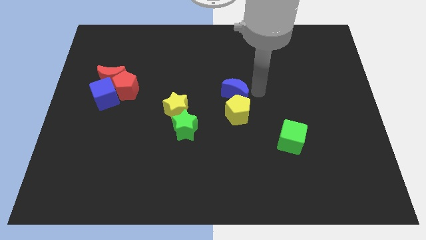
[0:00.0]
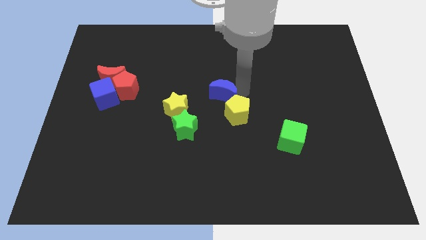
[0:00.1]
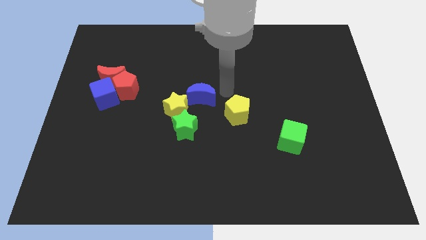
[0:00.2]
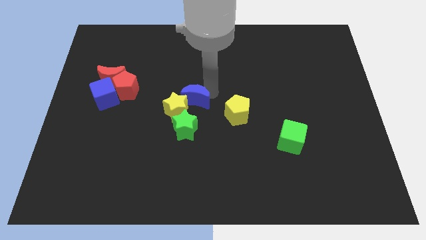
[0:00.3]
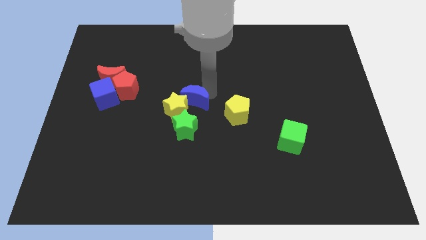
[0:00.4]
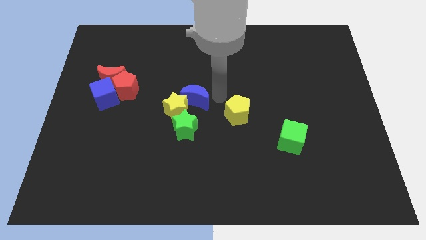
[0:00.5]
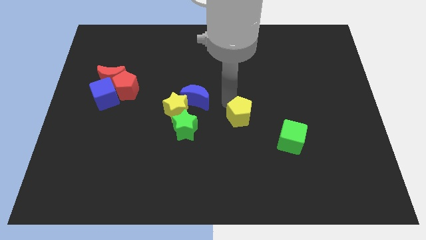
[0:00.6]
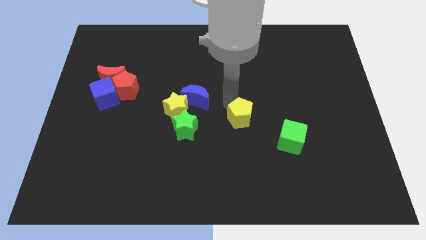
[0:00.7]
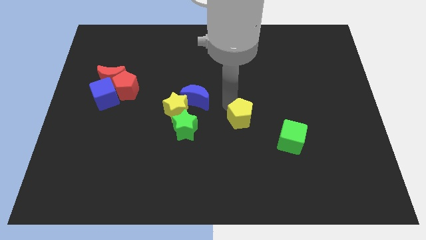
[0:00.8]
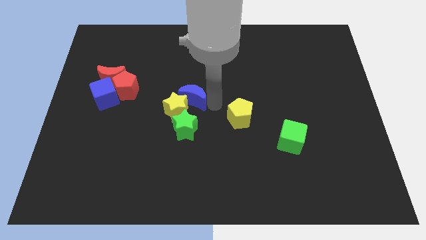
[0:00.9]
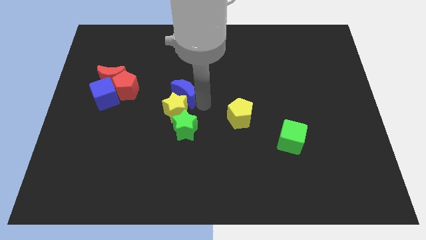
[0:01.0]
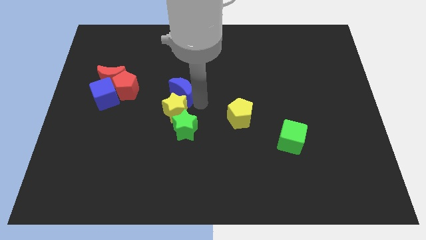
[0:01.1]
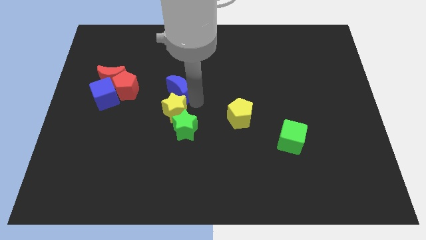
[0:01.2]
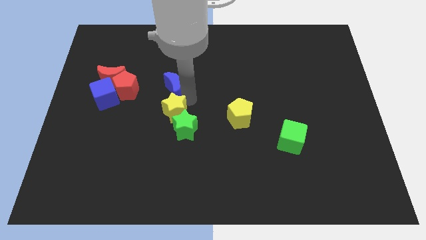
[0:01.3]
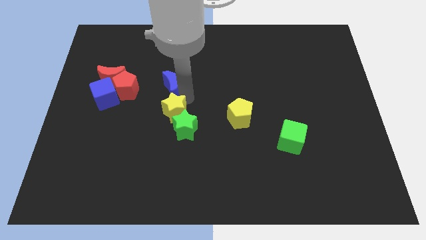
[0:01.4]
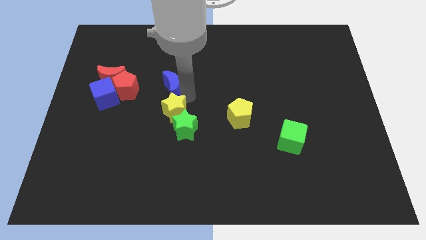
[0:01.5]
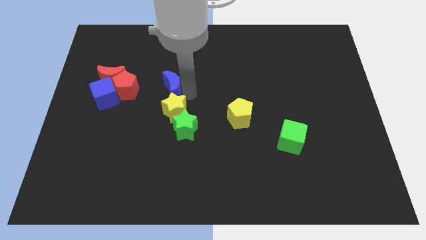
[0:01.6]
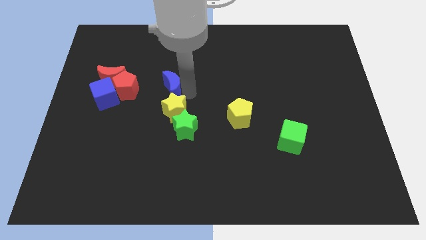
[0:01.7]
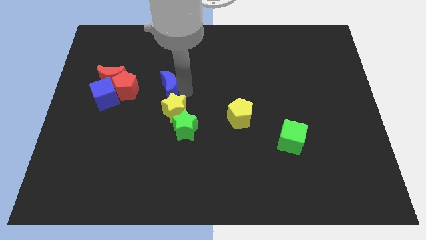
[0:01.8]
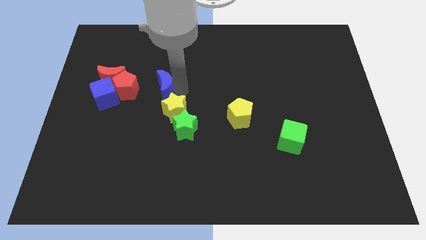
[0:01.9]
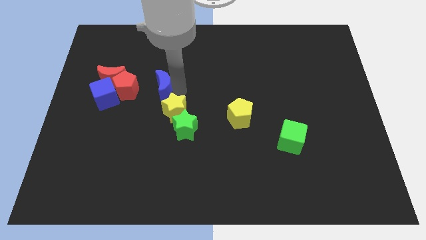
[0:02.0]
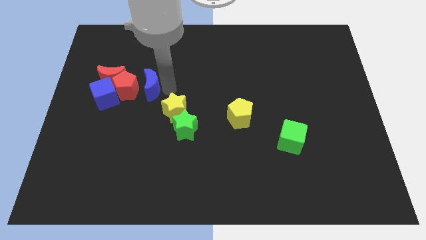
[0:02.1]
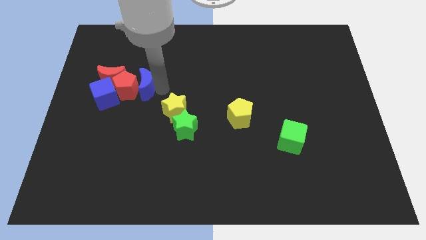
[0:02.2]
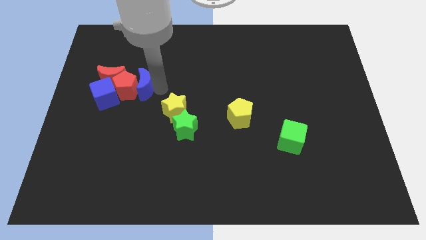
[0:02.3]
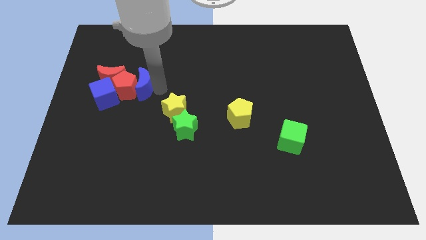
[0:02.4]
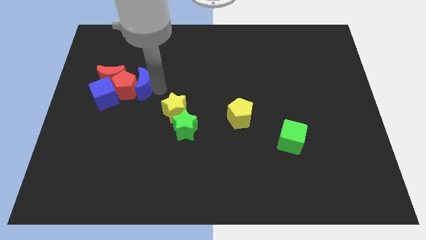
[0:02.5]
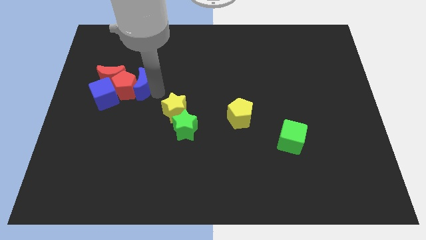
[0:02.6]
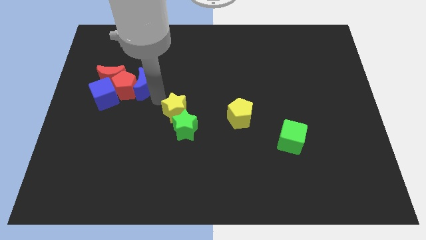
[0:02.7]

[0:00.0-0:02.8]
place blue crescent beside red pentagon

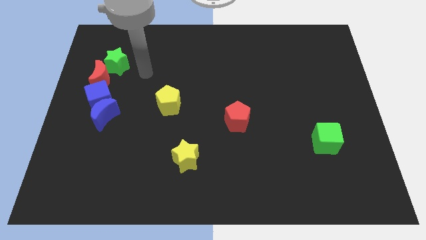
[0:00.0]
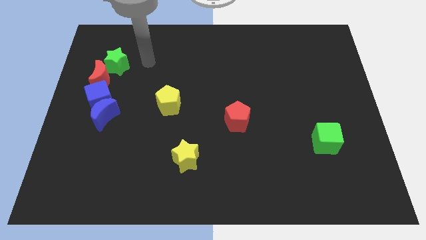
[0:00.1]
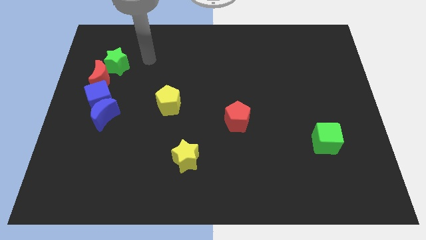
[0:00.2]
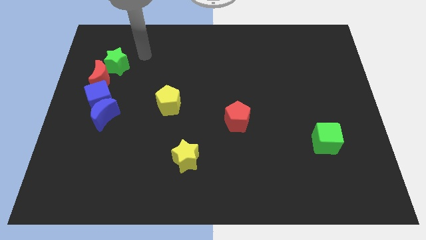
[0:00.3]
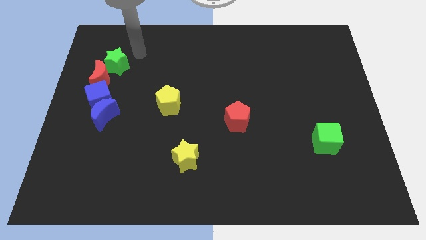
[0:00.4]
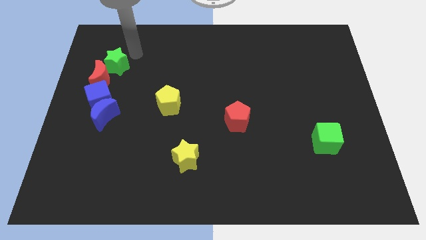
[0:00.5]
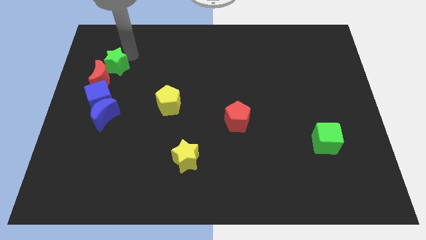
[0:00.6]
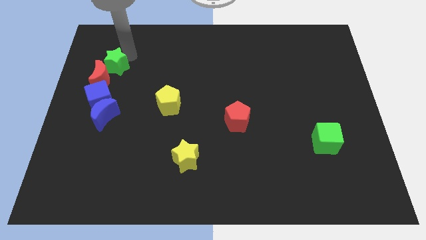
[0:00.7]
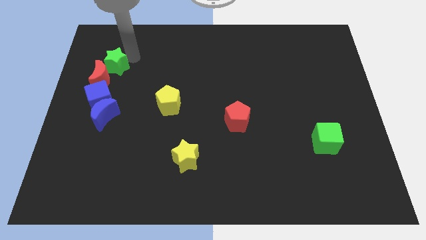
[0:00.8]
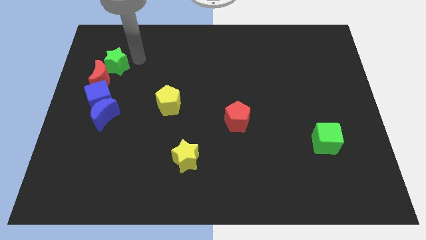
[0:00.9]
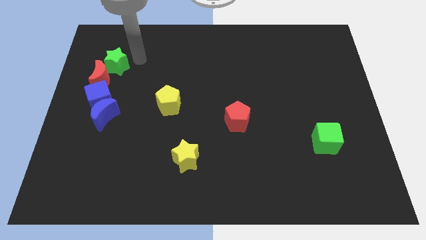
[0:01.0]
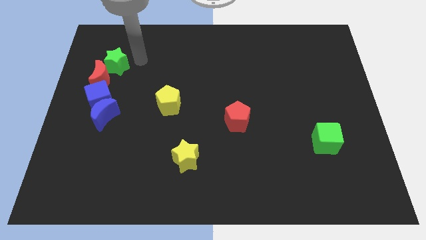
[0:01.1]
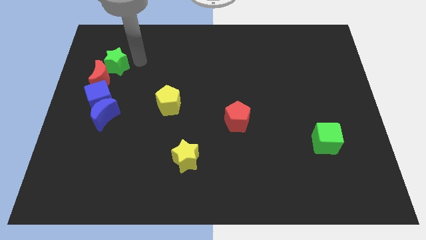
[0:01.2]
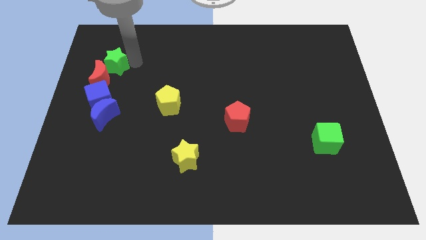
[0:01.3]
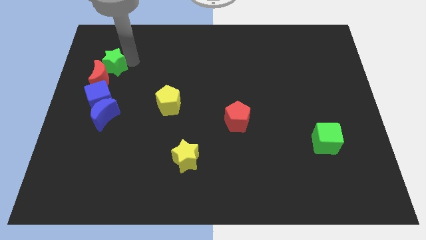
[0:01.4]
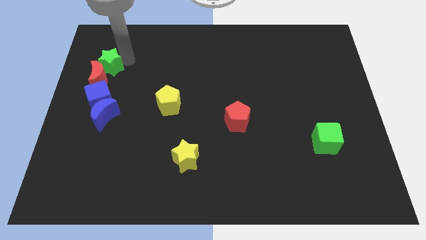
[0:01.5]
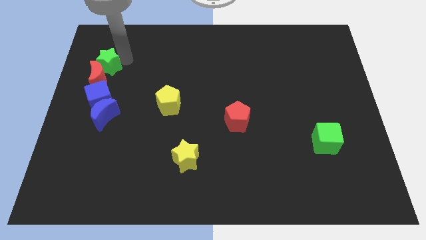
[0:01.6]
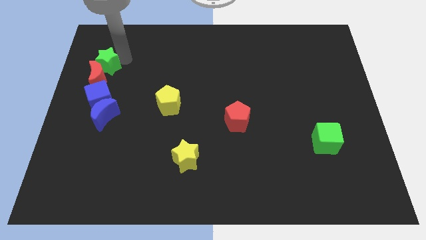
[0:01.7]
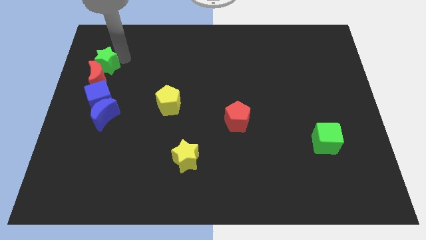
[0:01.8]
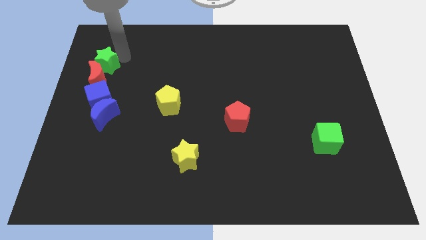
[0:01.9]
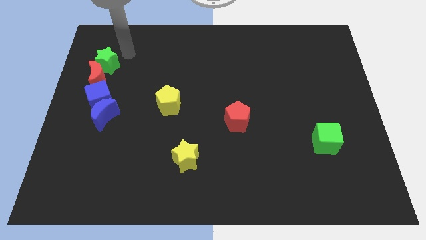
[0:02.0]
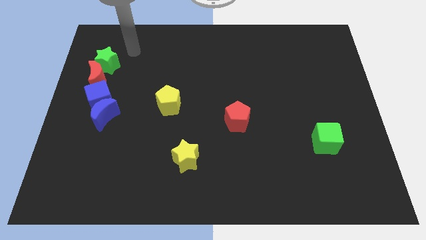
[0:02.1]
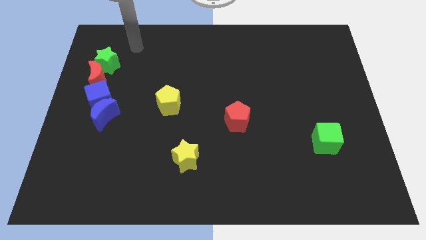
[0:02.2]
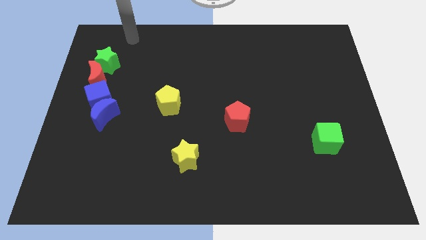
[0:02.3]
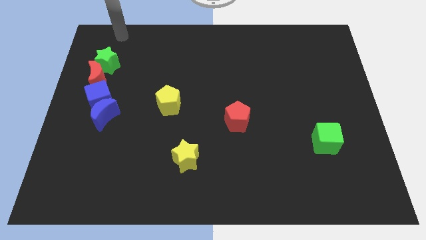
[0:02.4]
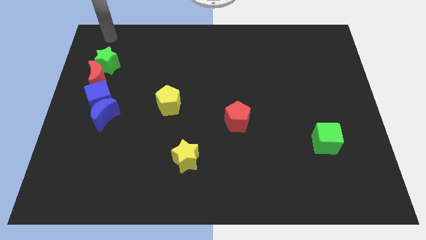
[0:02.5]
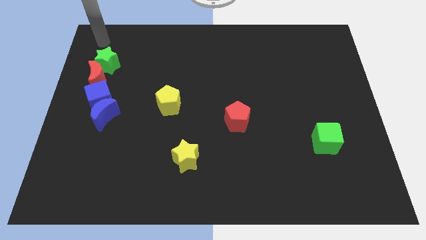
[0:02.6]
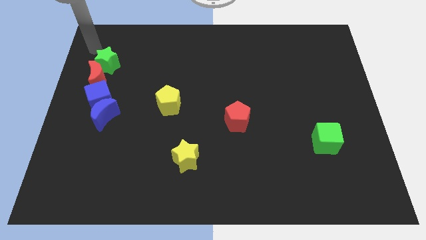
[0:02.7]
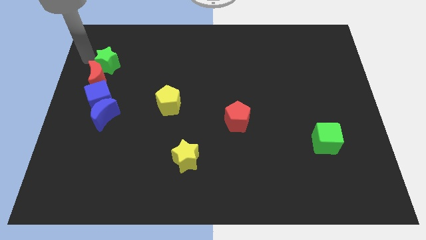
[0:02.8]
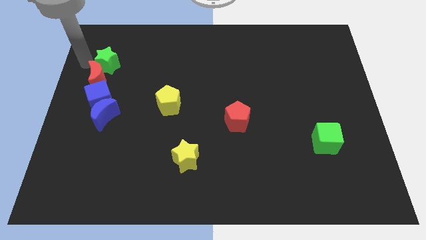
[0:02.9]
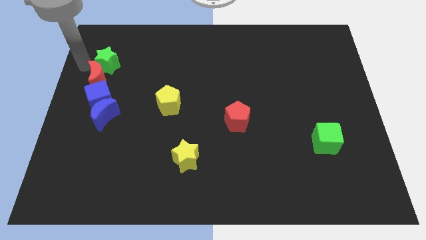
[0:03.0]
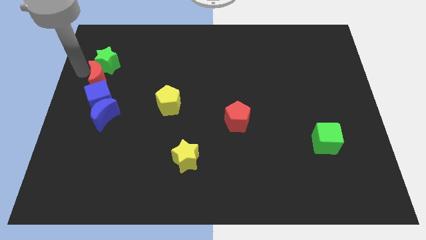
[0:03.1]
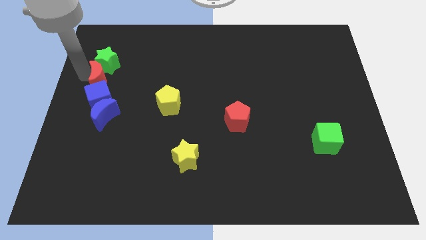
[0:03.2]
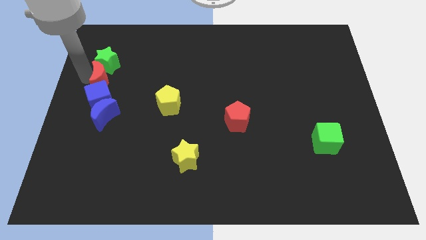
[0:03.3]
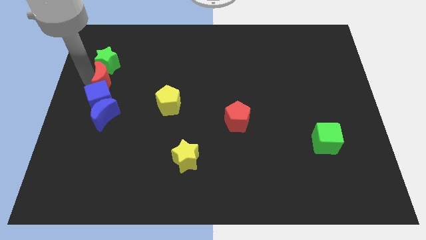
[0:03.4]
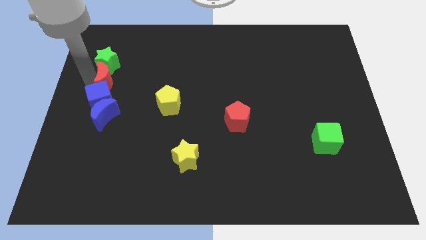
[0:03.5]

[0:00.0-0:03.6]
arrange the green star and red moon in a vertical line at the top of the blue cube

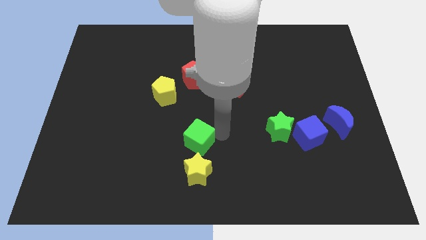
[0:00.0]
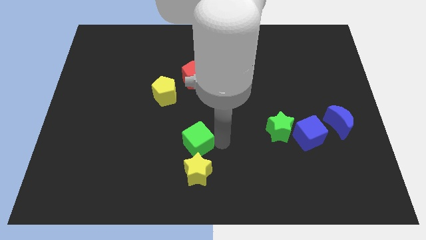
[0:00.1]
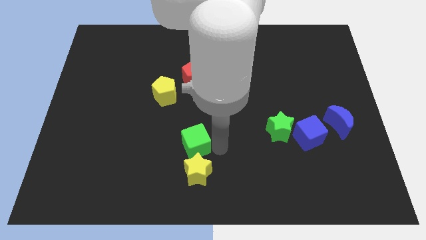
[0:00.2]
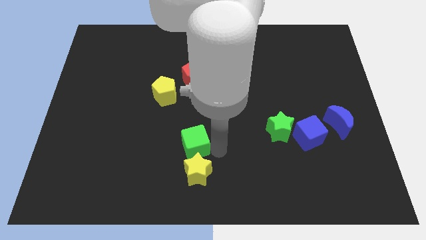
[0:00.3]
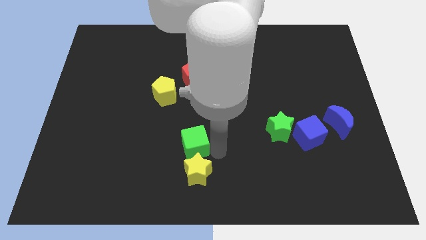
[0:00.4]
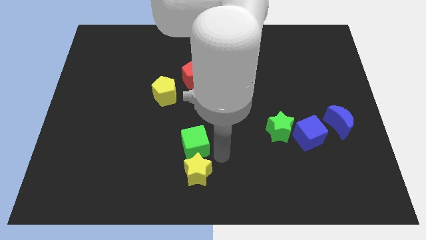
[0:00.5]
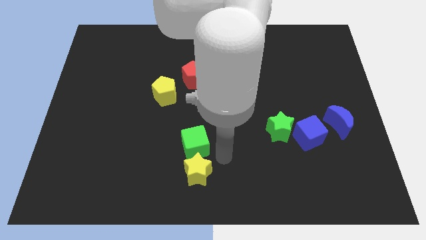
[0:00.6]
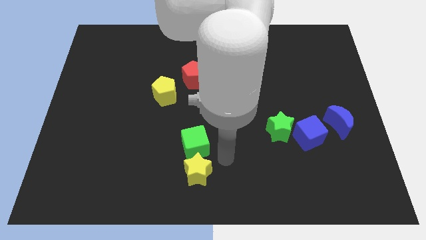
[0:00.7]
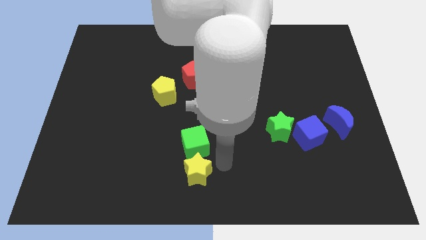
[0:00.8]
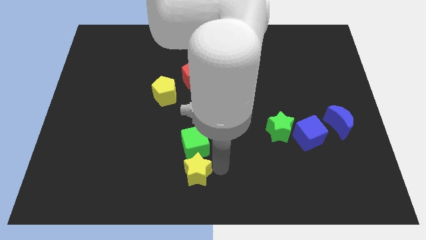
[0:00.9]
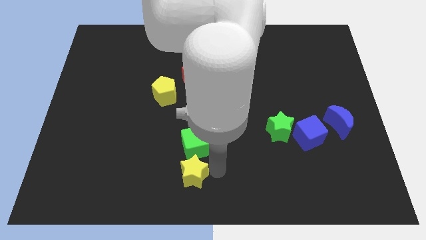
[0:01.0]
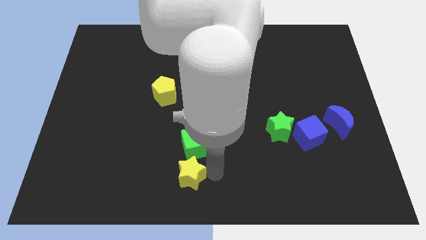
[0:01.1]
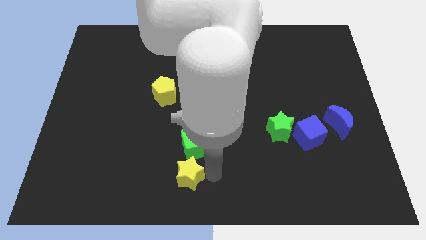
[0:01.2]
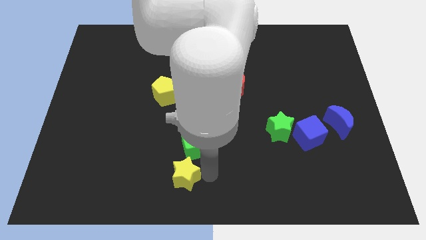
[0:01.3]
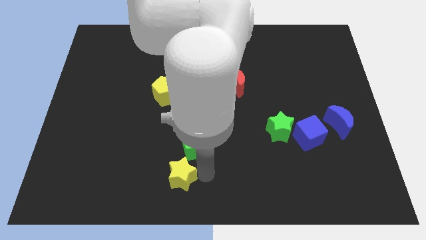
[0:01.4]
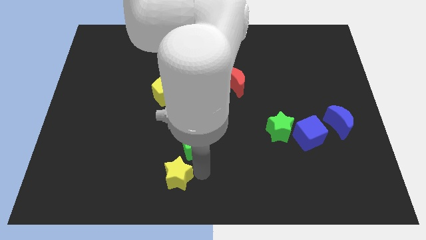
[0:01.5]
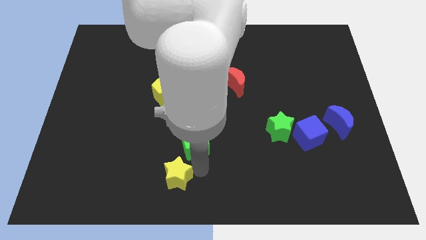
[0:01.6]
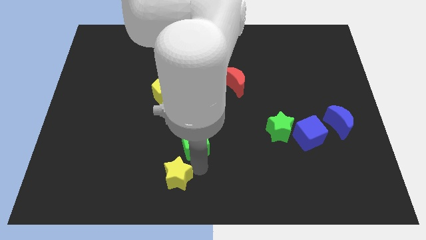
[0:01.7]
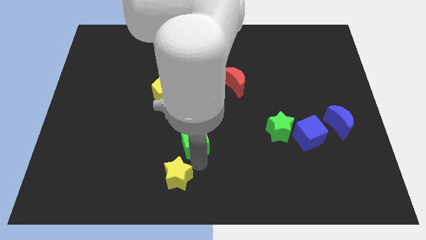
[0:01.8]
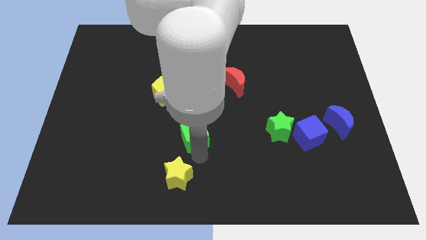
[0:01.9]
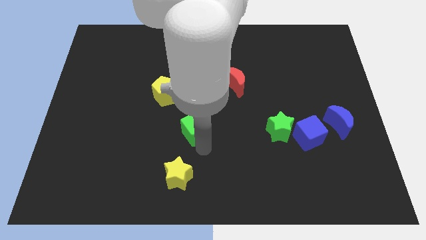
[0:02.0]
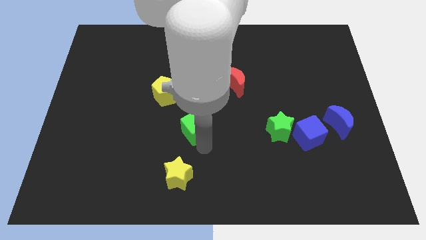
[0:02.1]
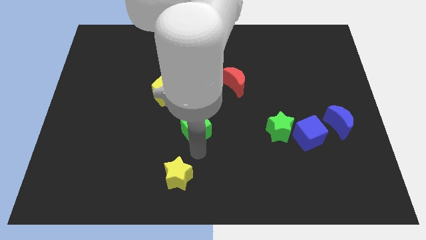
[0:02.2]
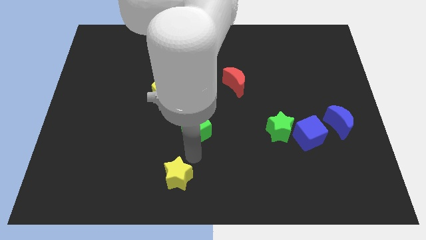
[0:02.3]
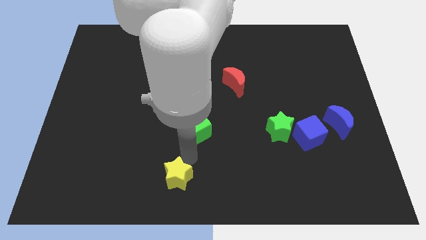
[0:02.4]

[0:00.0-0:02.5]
separate yellow star from green cube

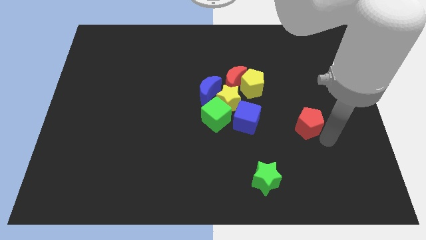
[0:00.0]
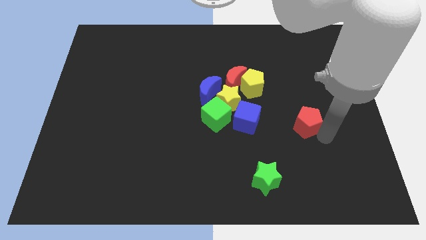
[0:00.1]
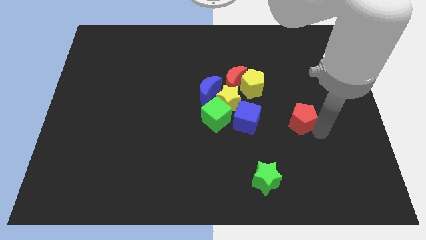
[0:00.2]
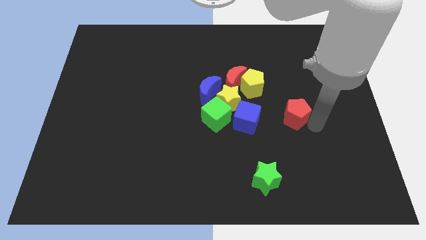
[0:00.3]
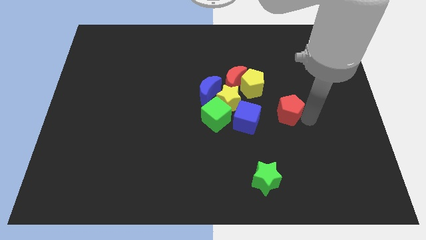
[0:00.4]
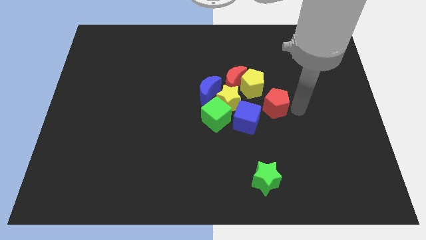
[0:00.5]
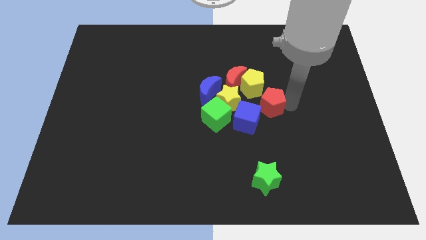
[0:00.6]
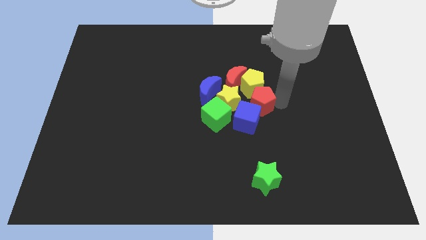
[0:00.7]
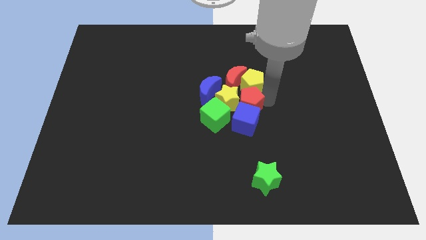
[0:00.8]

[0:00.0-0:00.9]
place the red pentagon in between the yellow pentagon and the blue cube
